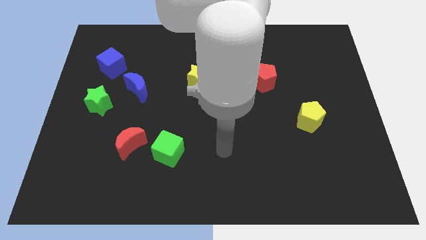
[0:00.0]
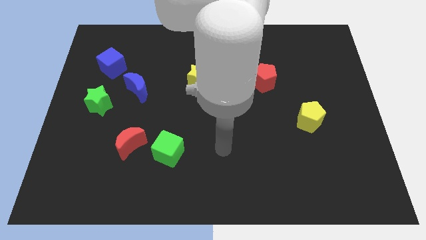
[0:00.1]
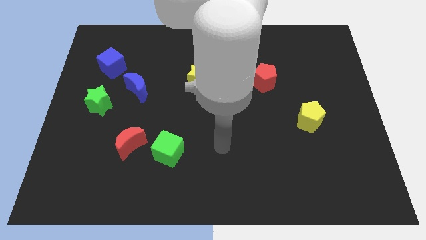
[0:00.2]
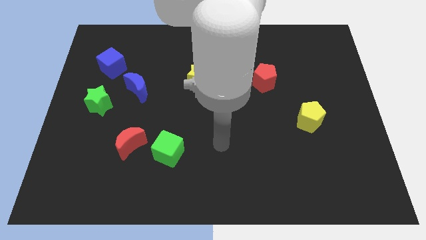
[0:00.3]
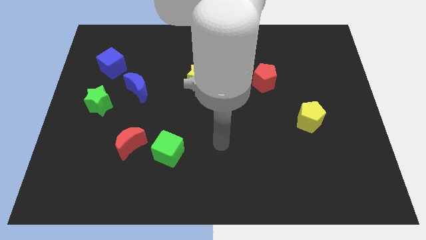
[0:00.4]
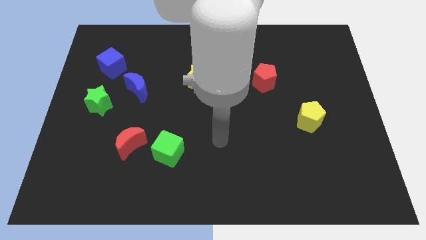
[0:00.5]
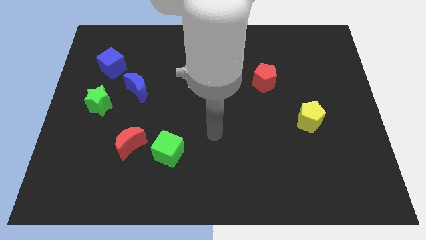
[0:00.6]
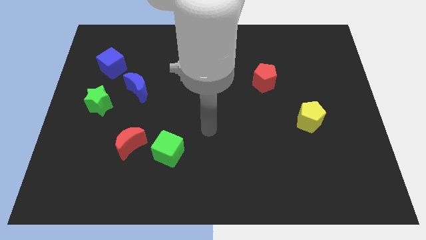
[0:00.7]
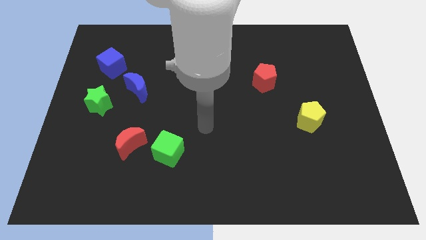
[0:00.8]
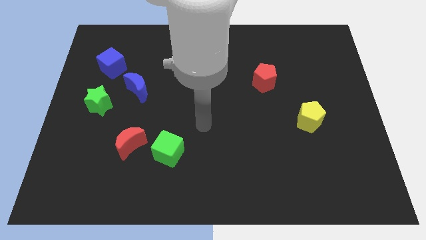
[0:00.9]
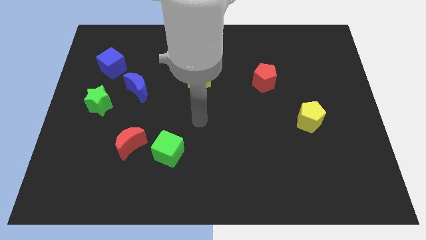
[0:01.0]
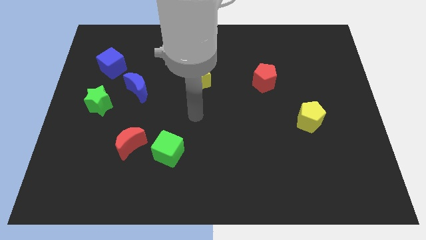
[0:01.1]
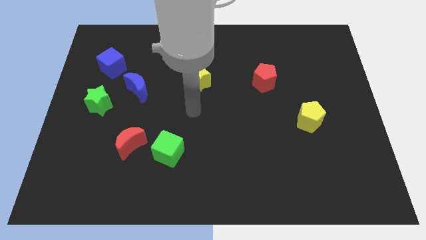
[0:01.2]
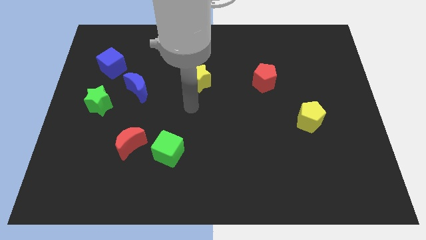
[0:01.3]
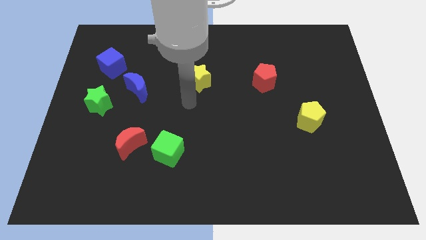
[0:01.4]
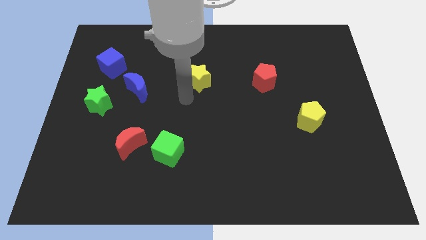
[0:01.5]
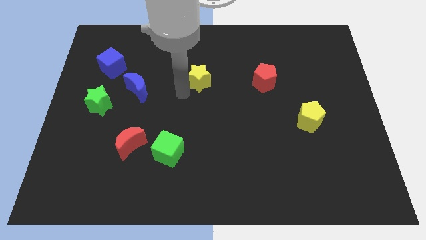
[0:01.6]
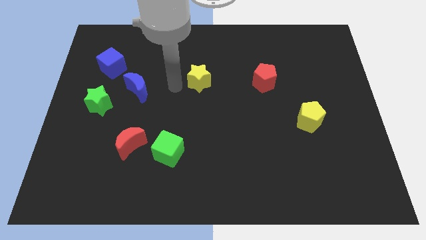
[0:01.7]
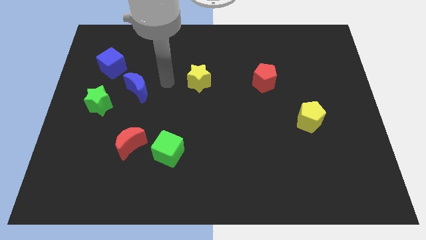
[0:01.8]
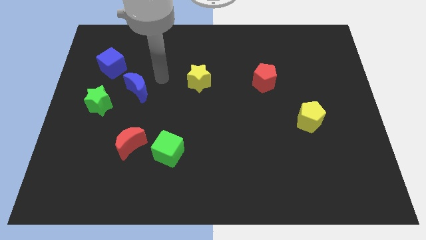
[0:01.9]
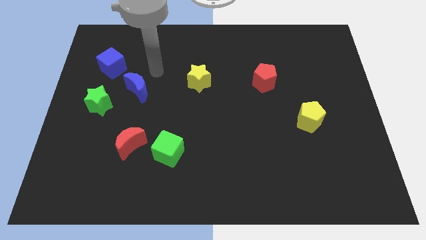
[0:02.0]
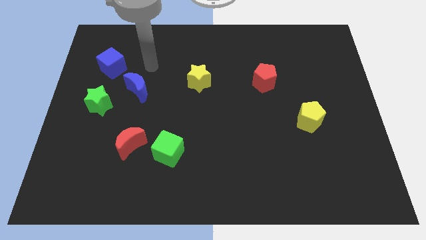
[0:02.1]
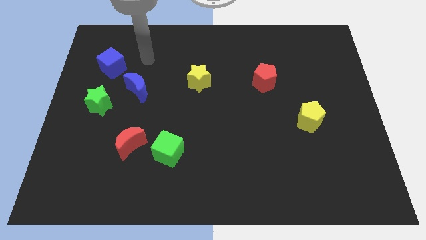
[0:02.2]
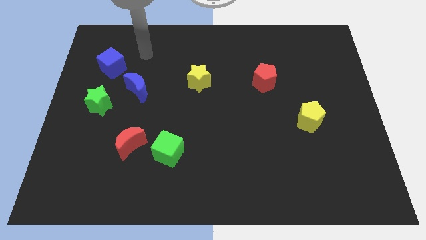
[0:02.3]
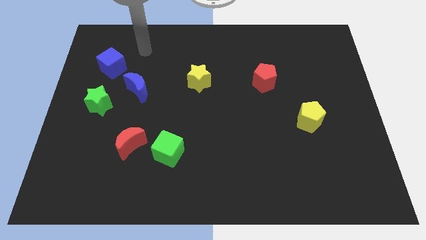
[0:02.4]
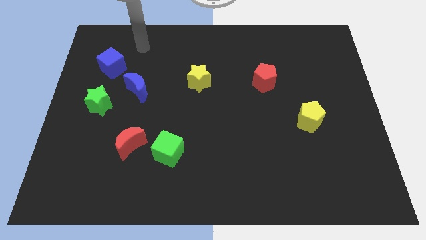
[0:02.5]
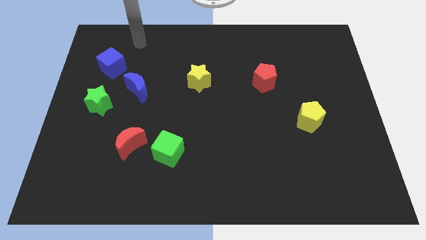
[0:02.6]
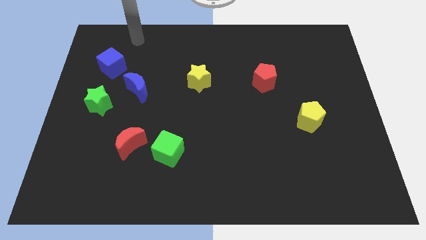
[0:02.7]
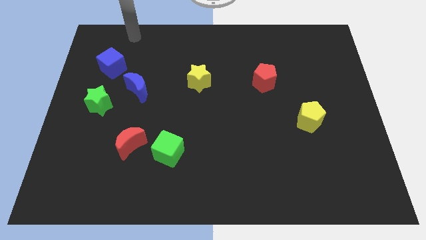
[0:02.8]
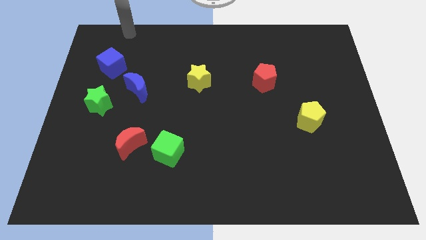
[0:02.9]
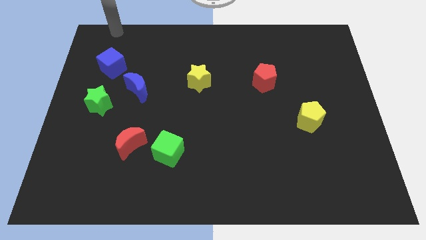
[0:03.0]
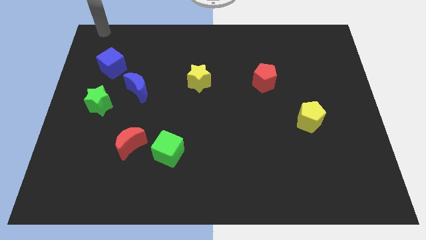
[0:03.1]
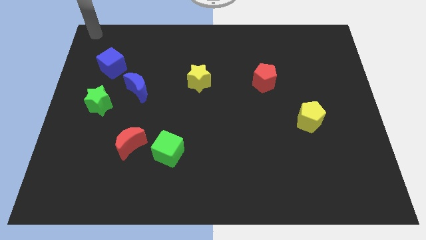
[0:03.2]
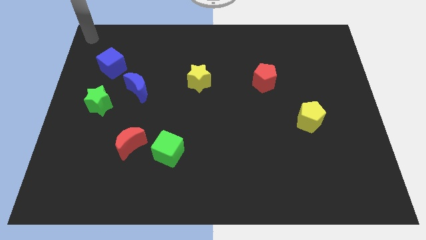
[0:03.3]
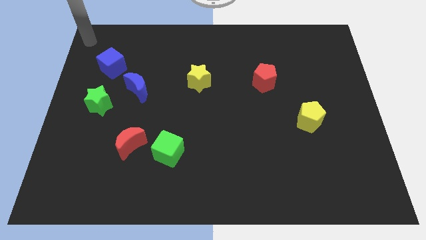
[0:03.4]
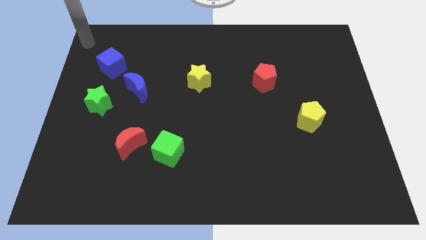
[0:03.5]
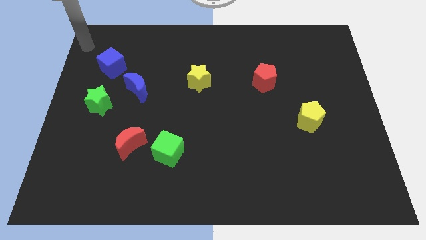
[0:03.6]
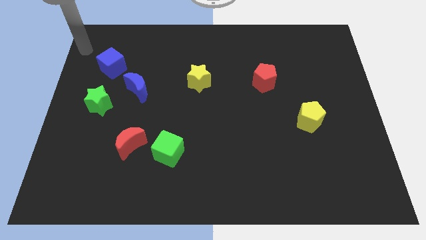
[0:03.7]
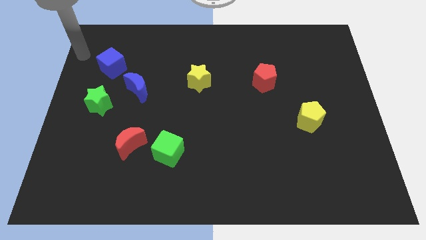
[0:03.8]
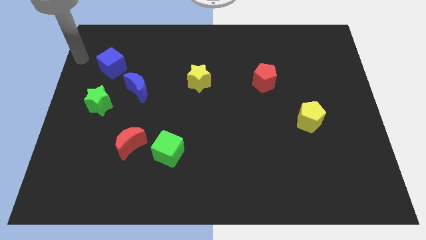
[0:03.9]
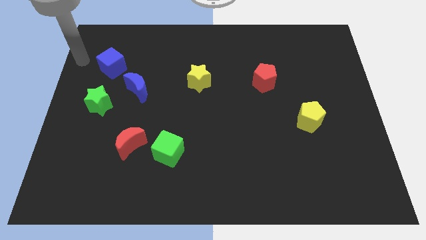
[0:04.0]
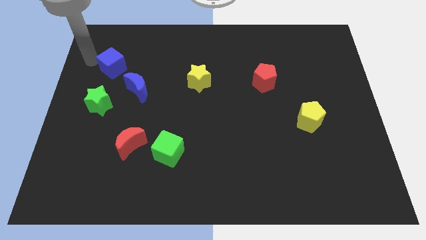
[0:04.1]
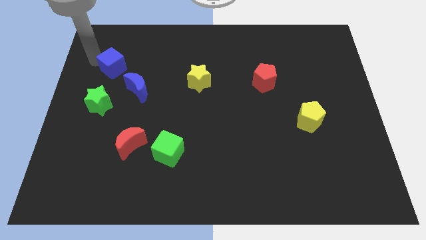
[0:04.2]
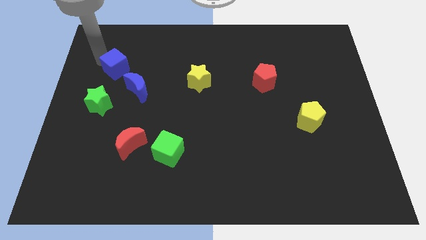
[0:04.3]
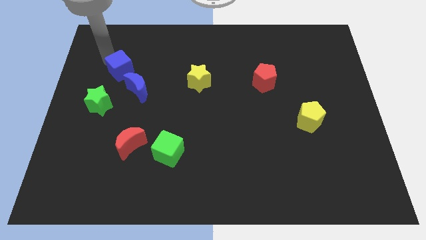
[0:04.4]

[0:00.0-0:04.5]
point your arm at the top of blue cube

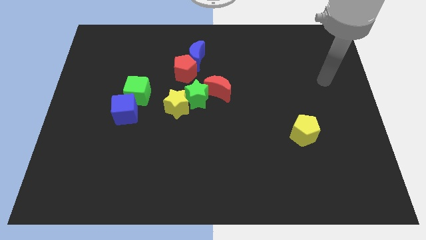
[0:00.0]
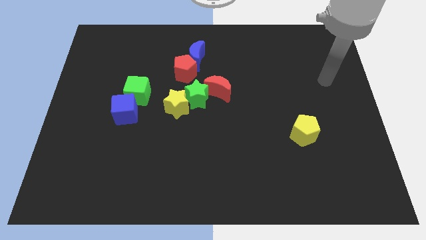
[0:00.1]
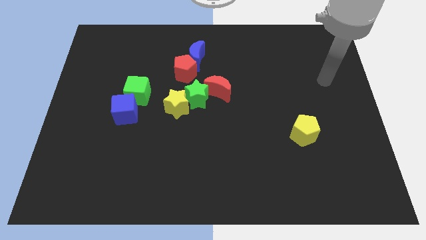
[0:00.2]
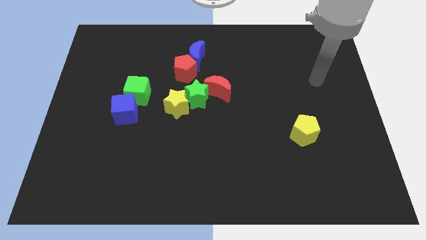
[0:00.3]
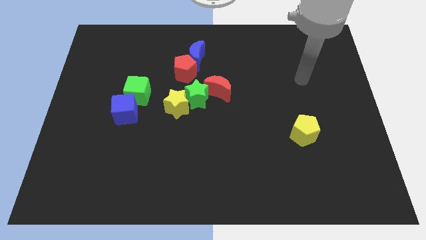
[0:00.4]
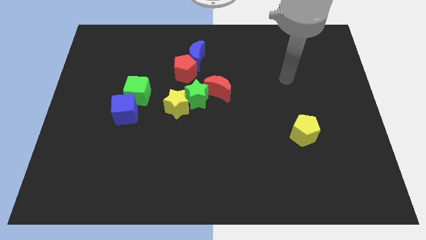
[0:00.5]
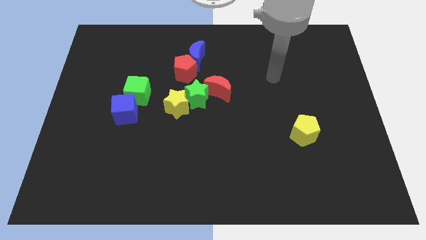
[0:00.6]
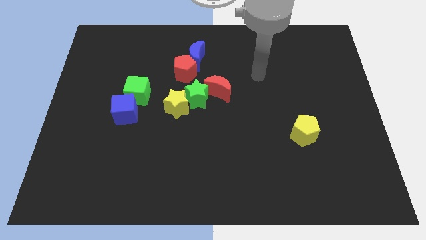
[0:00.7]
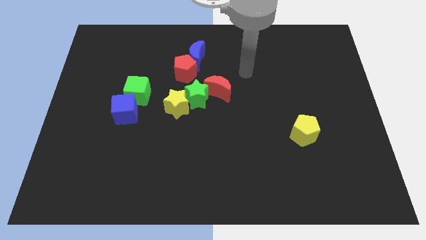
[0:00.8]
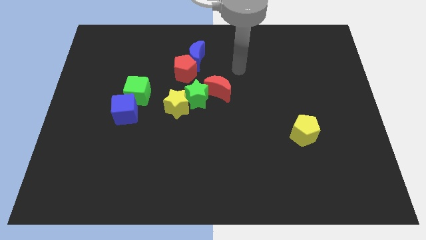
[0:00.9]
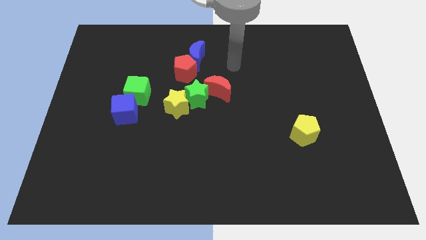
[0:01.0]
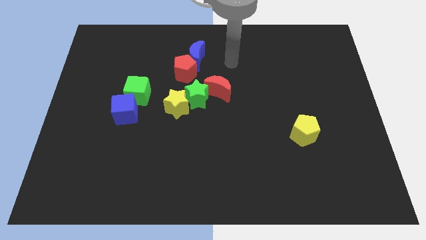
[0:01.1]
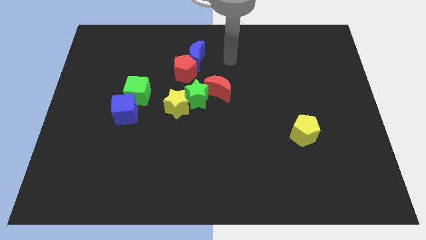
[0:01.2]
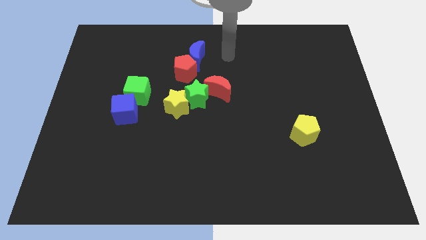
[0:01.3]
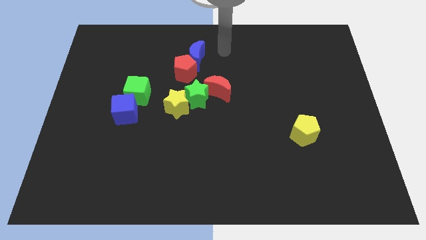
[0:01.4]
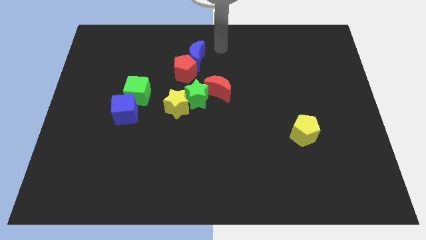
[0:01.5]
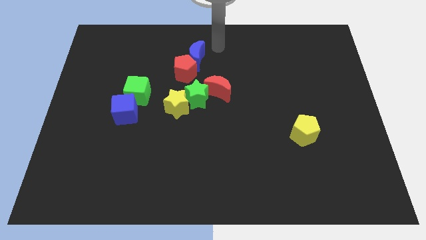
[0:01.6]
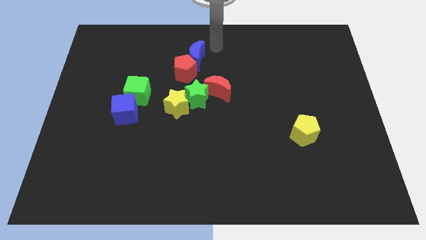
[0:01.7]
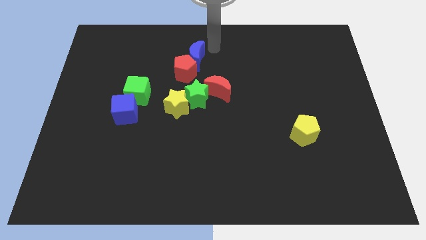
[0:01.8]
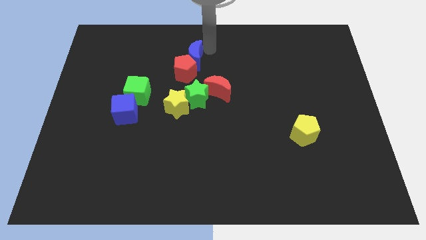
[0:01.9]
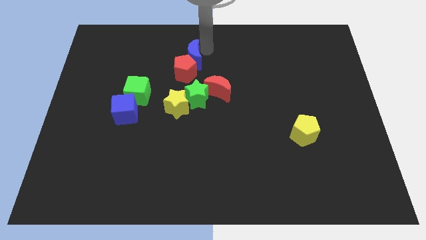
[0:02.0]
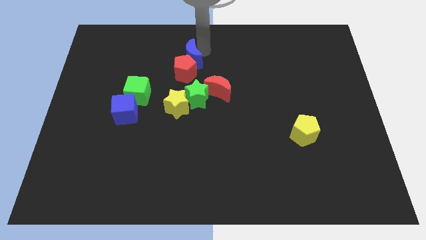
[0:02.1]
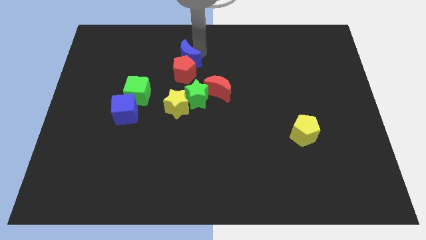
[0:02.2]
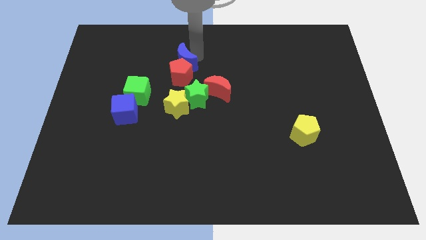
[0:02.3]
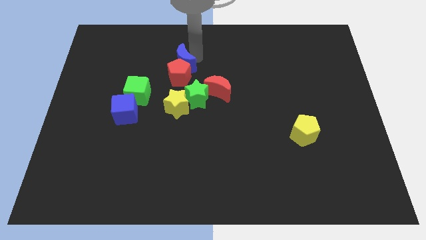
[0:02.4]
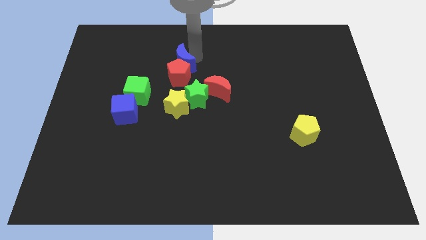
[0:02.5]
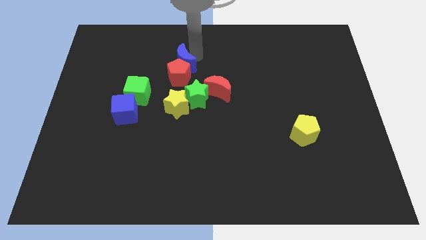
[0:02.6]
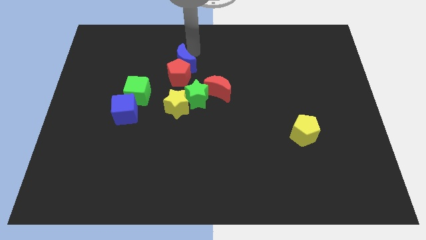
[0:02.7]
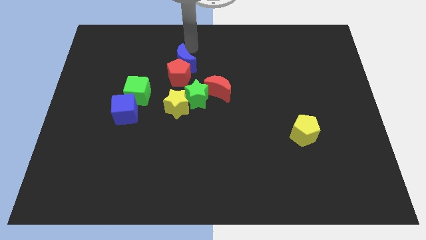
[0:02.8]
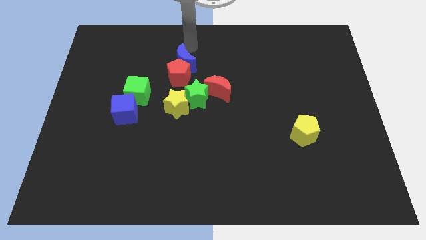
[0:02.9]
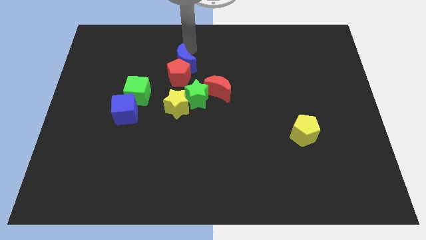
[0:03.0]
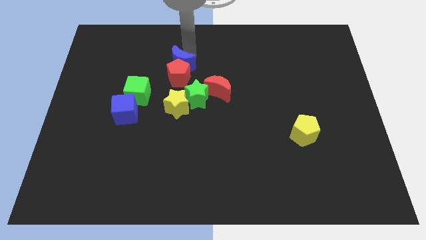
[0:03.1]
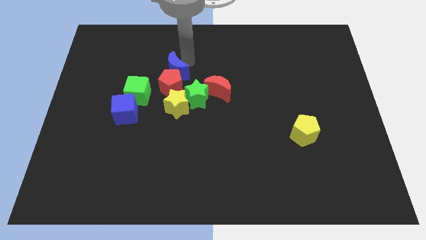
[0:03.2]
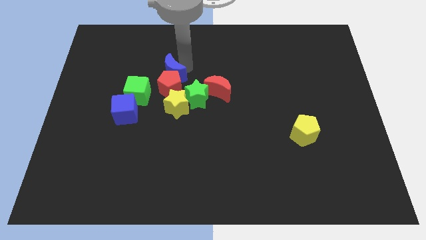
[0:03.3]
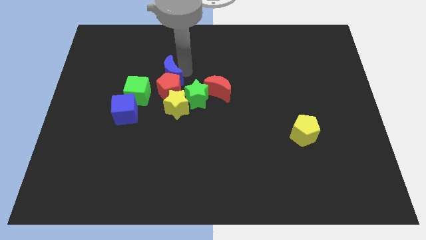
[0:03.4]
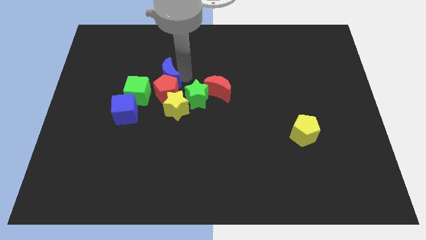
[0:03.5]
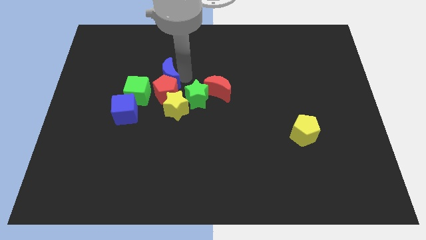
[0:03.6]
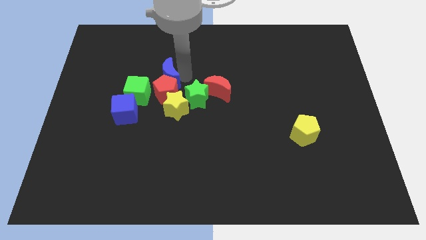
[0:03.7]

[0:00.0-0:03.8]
push the blue moon into the red pentagon

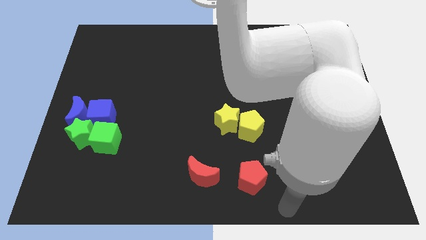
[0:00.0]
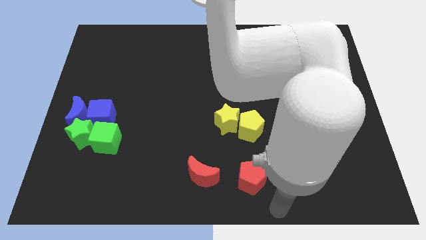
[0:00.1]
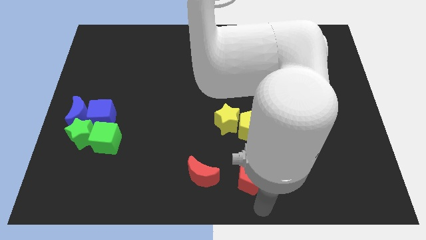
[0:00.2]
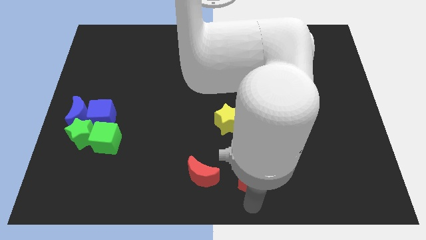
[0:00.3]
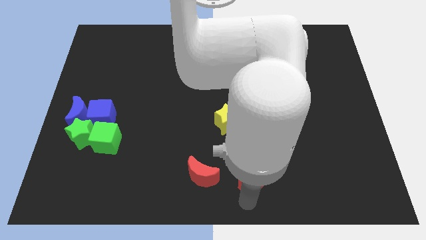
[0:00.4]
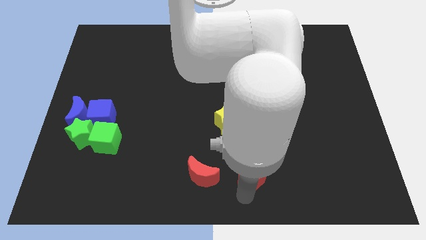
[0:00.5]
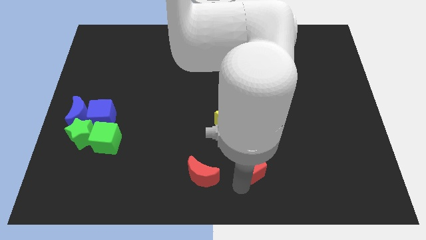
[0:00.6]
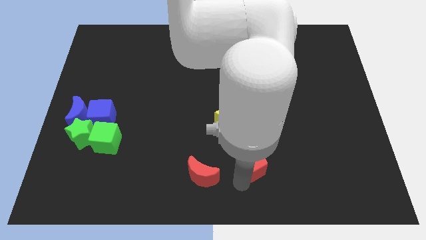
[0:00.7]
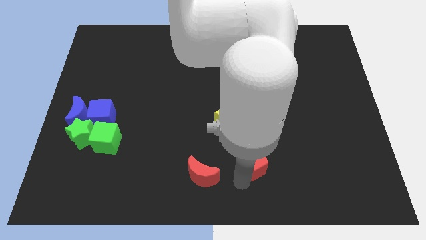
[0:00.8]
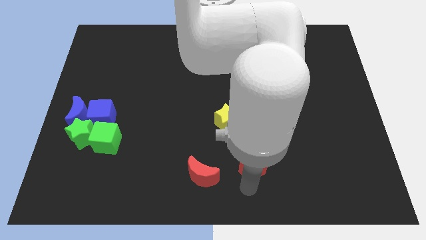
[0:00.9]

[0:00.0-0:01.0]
push the red pentagon towards the yellow pentagon
